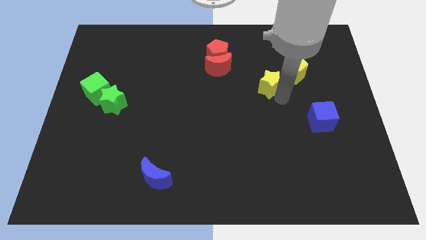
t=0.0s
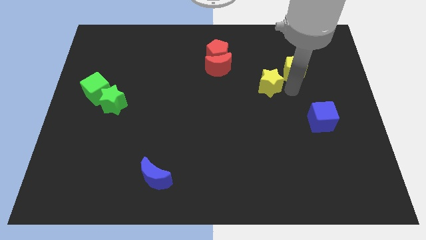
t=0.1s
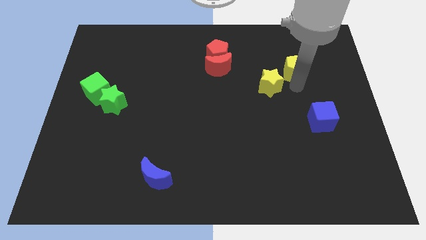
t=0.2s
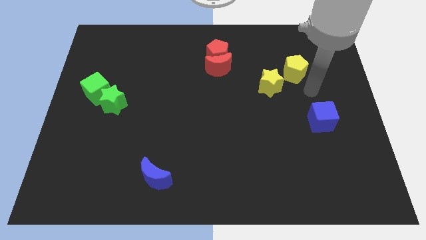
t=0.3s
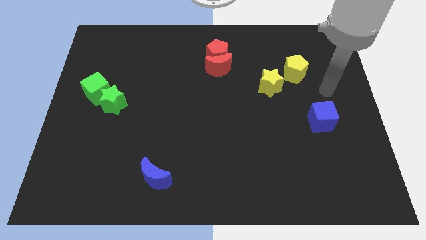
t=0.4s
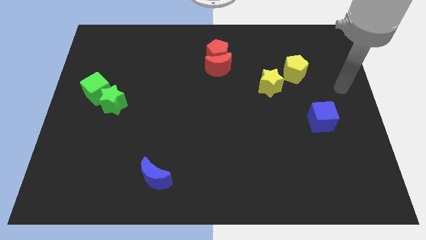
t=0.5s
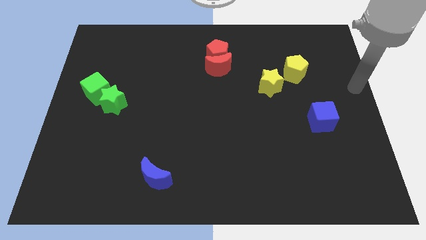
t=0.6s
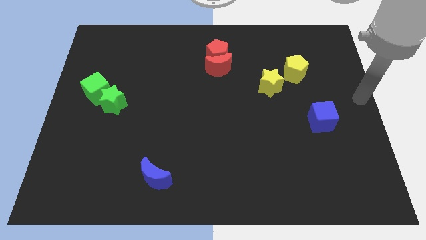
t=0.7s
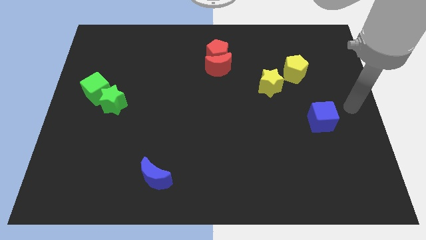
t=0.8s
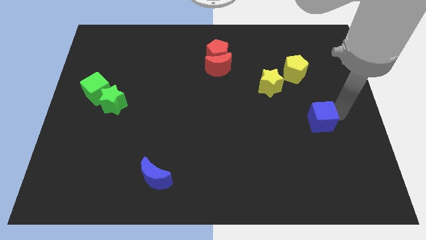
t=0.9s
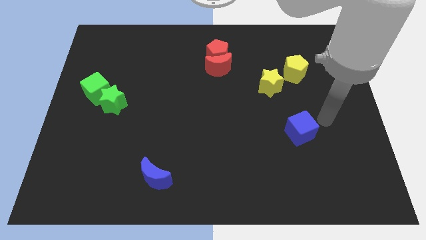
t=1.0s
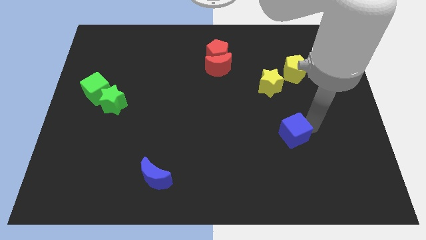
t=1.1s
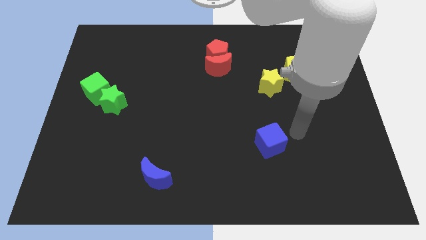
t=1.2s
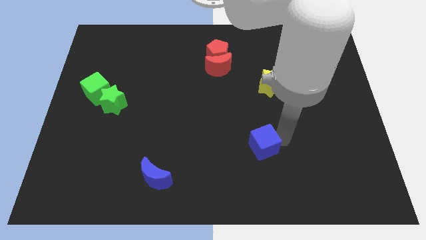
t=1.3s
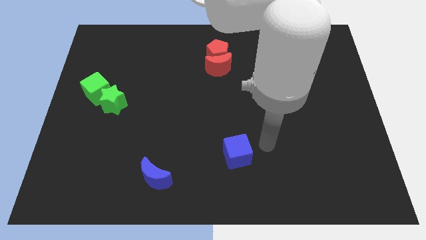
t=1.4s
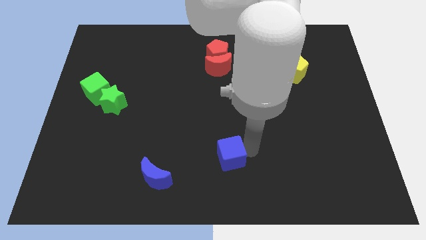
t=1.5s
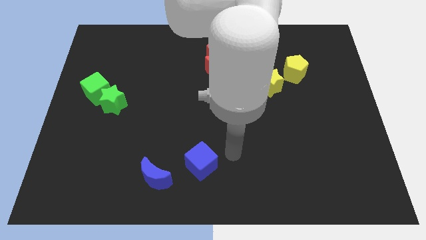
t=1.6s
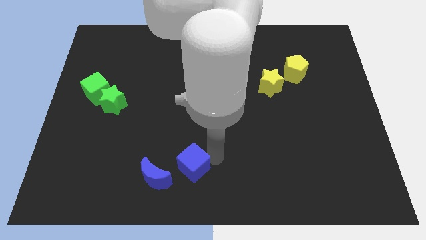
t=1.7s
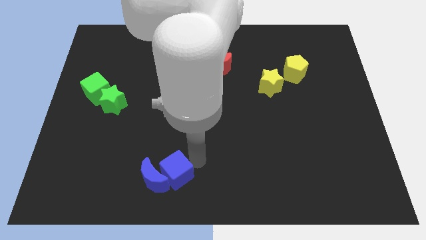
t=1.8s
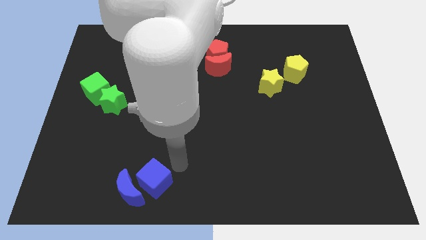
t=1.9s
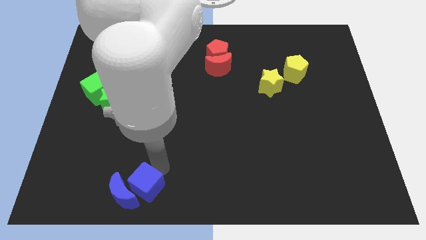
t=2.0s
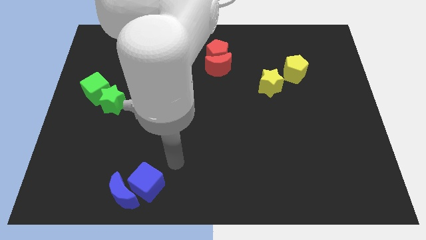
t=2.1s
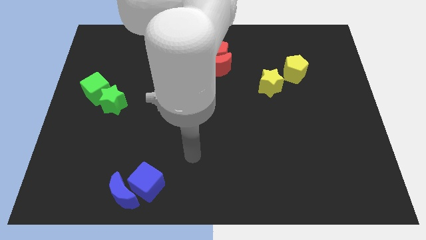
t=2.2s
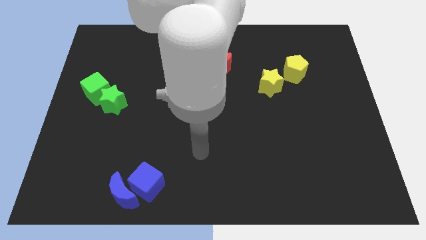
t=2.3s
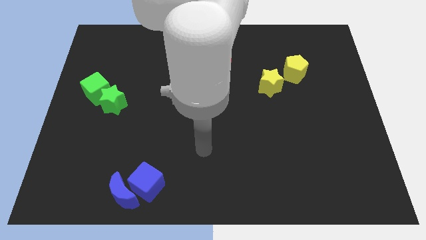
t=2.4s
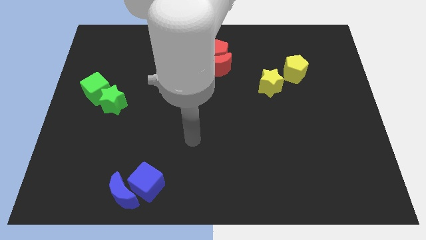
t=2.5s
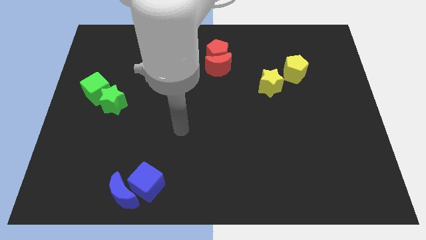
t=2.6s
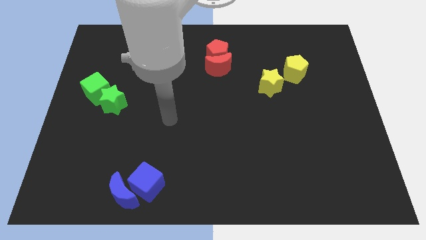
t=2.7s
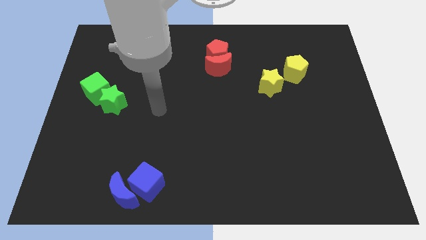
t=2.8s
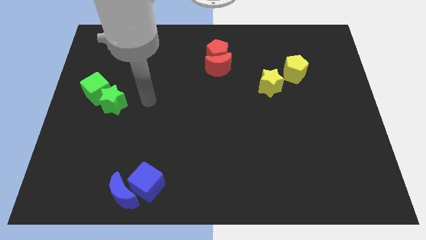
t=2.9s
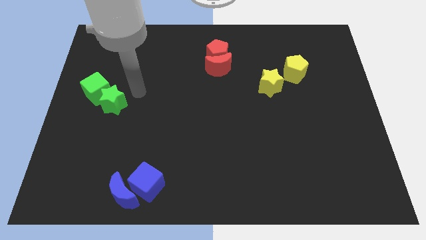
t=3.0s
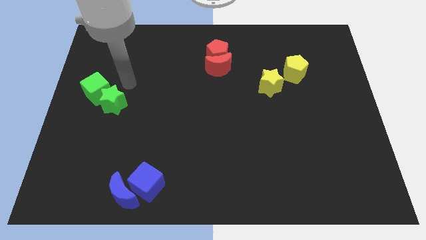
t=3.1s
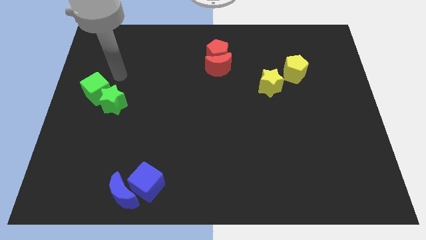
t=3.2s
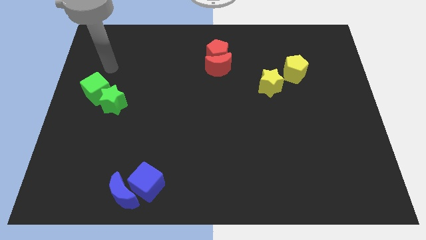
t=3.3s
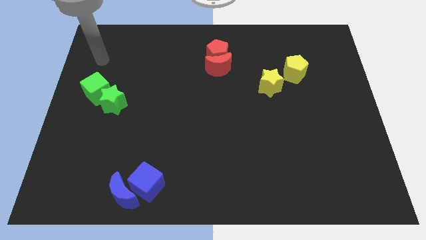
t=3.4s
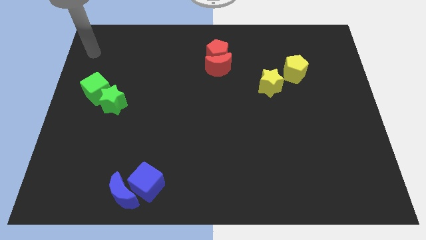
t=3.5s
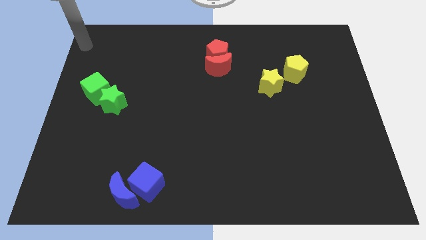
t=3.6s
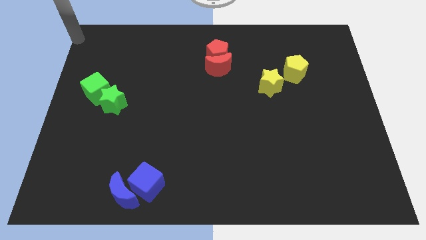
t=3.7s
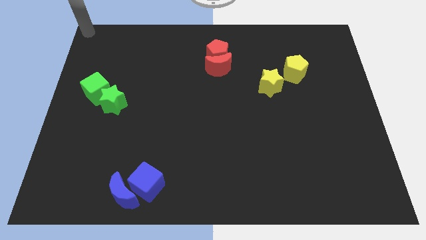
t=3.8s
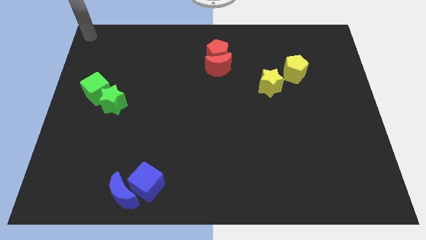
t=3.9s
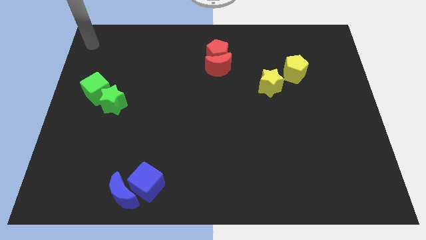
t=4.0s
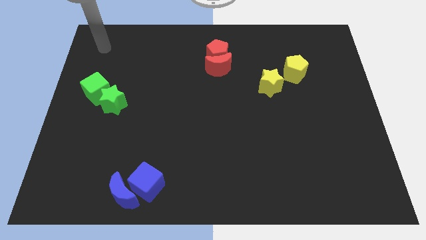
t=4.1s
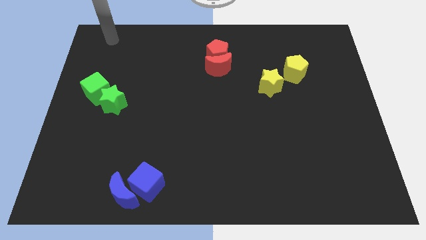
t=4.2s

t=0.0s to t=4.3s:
move the blue cube into the blue crescent

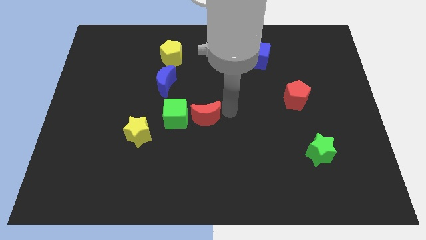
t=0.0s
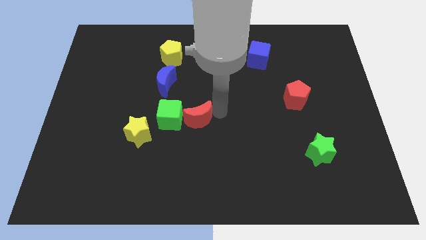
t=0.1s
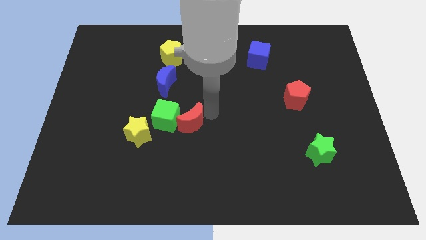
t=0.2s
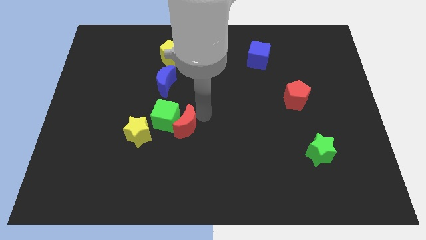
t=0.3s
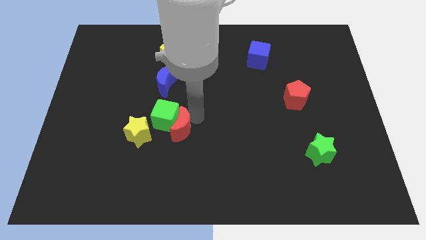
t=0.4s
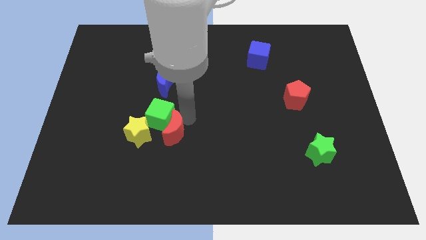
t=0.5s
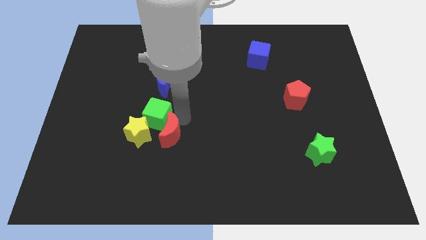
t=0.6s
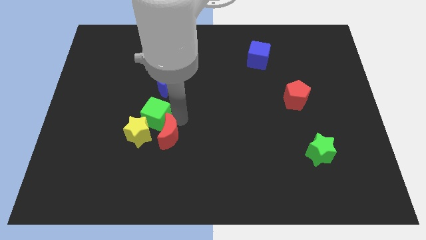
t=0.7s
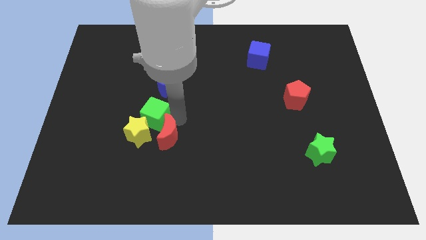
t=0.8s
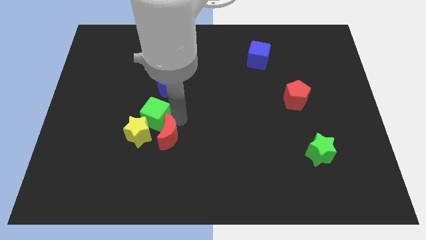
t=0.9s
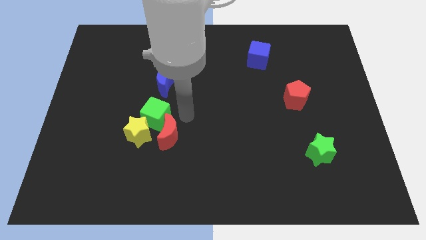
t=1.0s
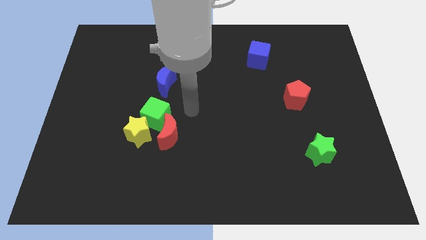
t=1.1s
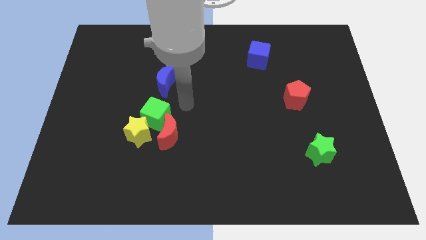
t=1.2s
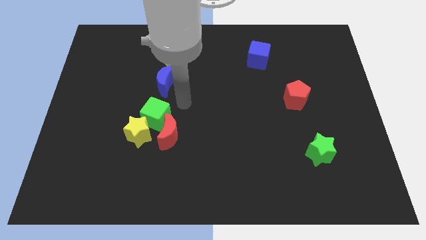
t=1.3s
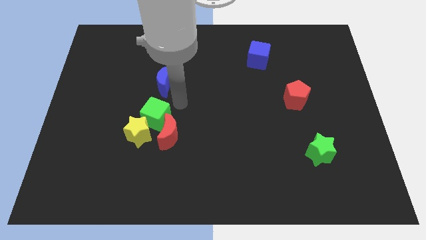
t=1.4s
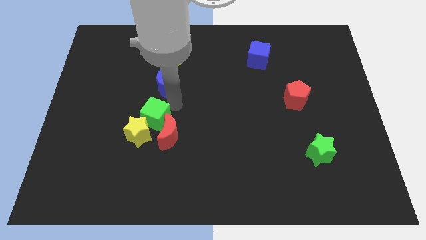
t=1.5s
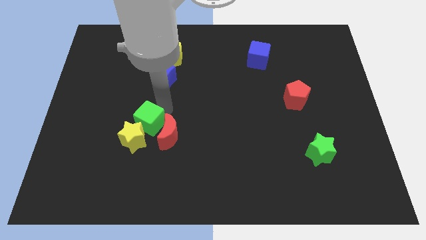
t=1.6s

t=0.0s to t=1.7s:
push red crescent towards green cube

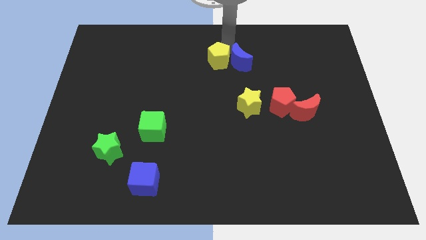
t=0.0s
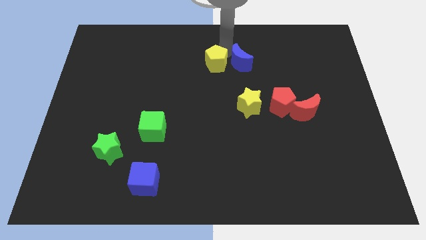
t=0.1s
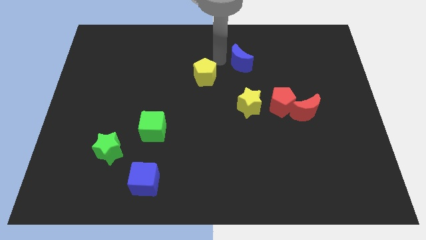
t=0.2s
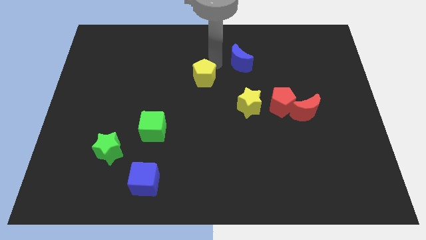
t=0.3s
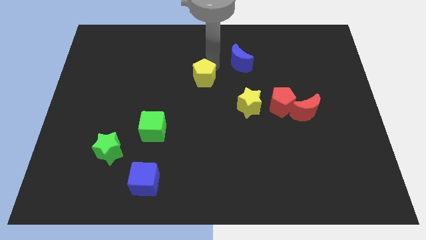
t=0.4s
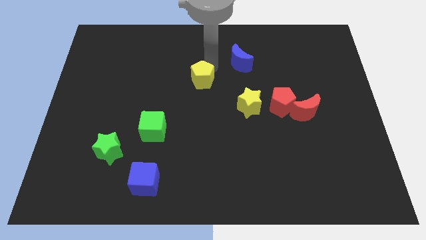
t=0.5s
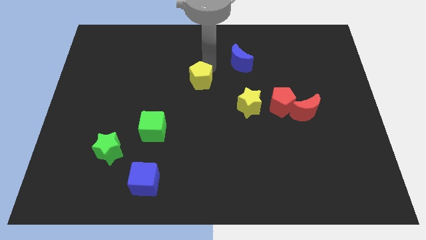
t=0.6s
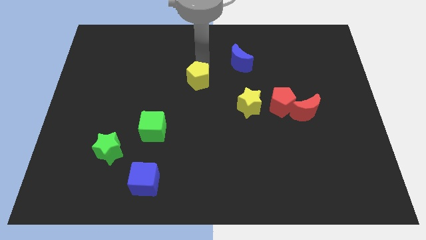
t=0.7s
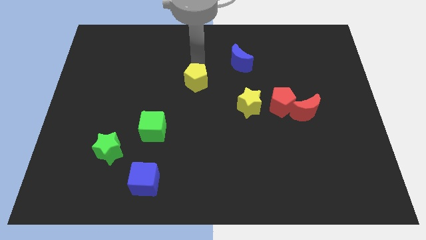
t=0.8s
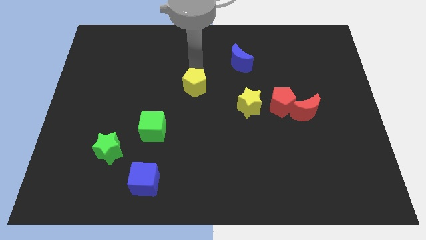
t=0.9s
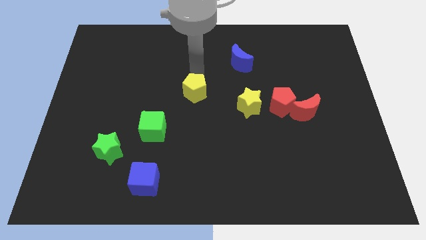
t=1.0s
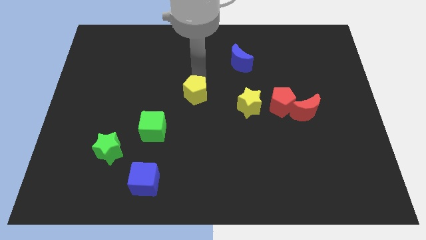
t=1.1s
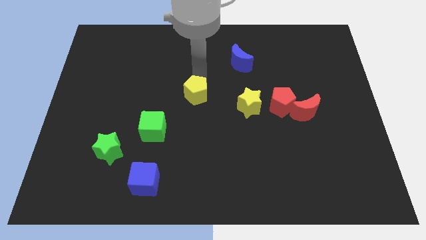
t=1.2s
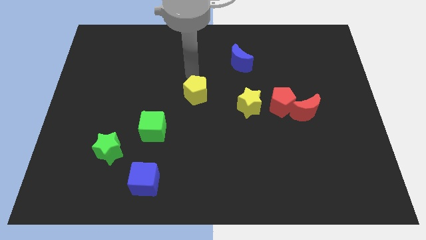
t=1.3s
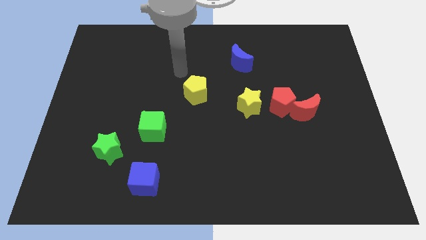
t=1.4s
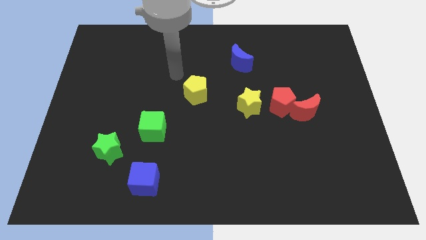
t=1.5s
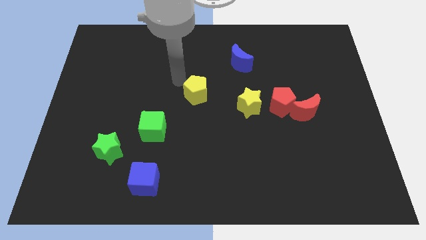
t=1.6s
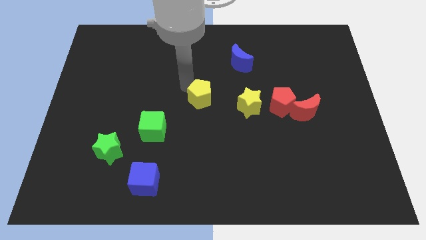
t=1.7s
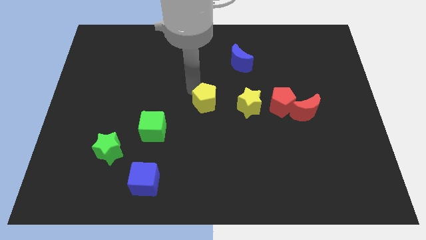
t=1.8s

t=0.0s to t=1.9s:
move the yellow pentagon to the centre of the board

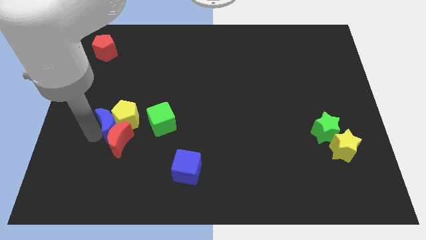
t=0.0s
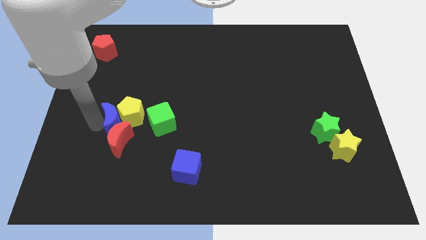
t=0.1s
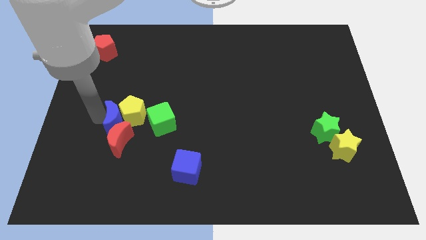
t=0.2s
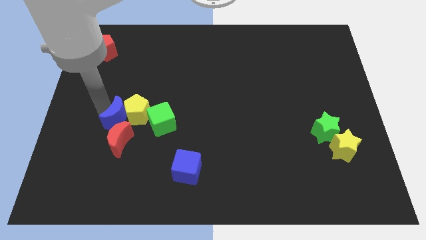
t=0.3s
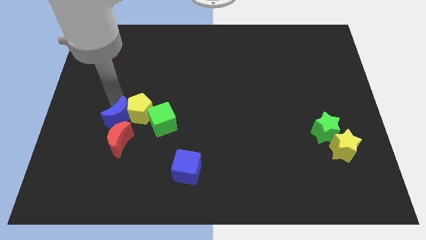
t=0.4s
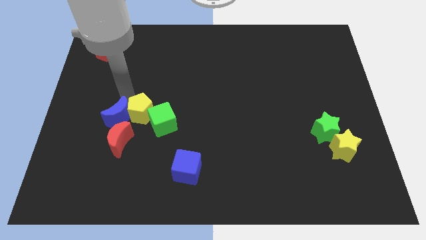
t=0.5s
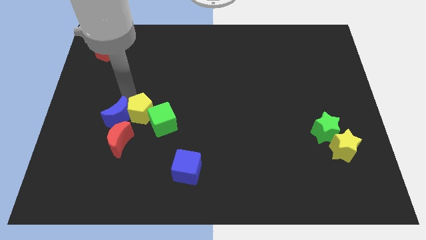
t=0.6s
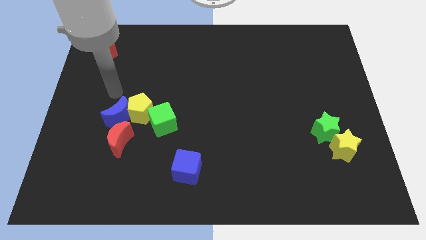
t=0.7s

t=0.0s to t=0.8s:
push blue crescent into group of blocks

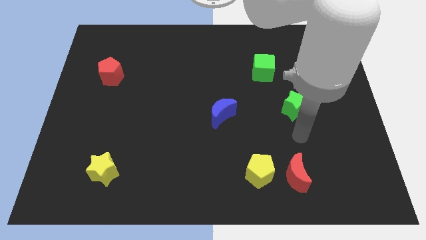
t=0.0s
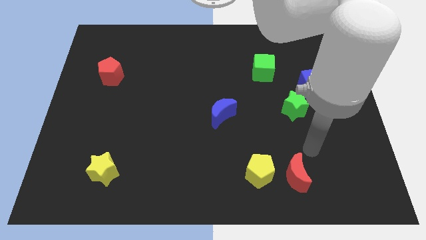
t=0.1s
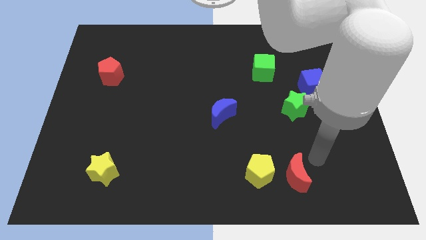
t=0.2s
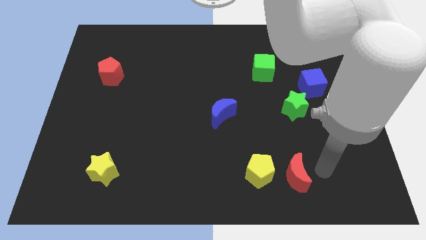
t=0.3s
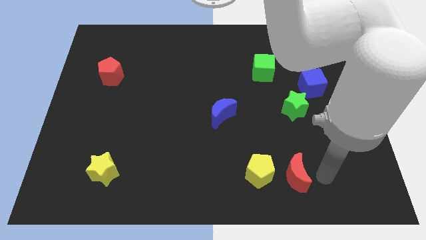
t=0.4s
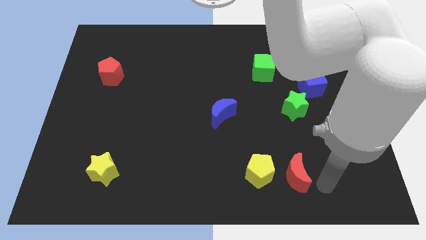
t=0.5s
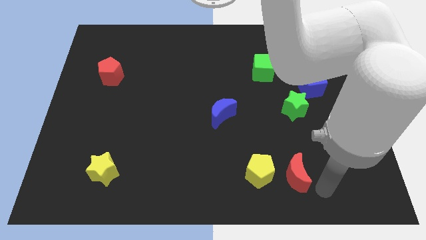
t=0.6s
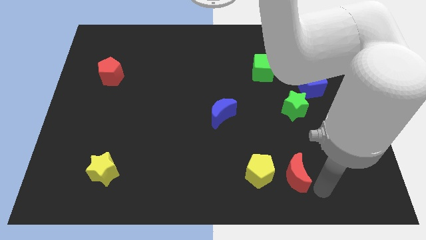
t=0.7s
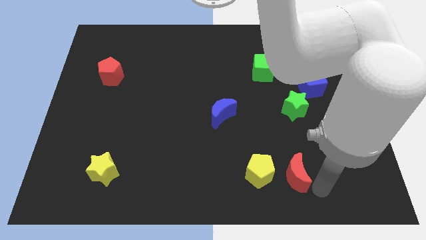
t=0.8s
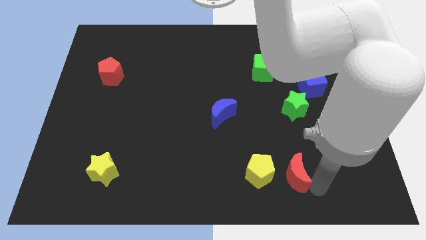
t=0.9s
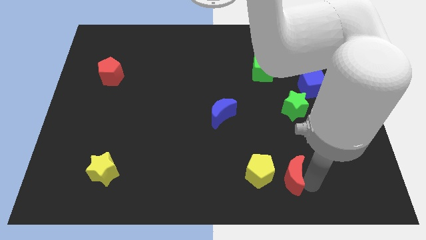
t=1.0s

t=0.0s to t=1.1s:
tap your arm to the right bottom side of red moon
